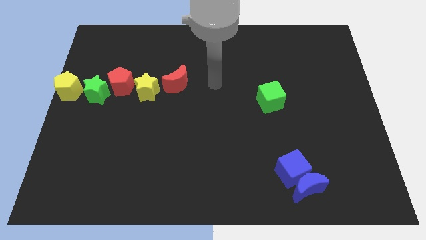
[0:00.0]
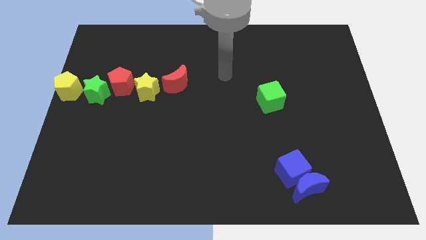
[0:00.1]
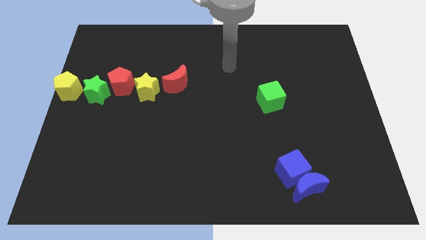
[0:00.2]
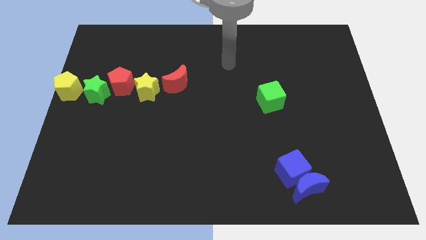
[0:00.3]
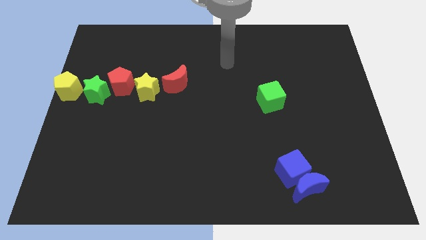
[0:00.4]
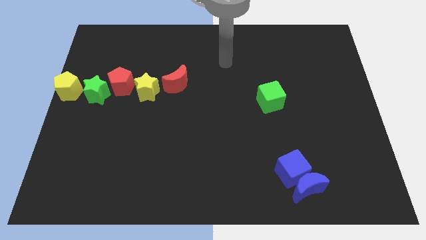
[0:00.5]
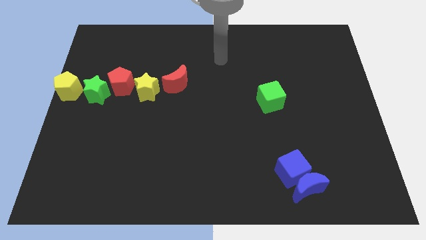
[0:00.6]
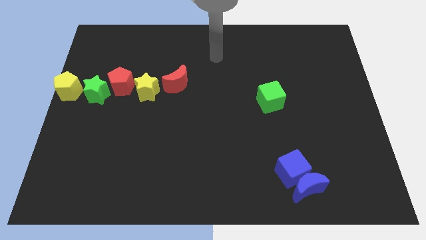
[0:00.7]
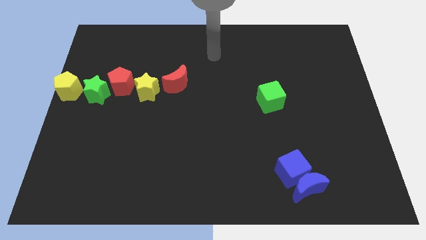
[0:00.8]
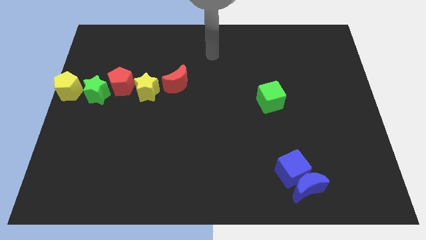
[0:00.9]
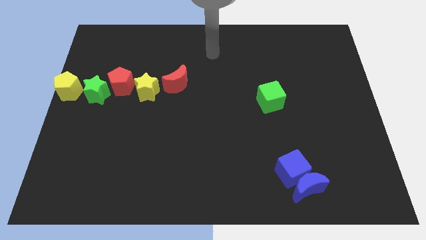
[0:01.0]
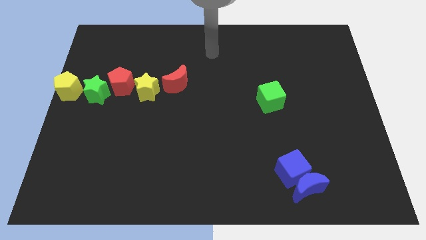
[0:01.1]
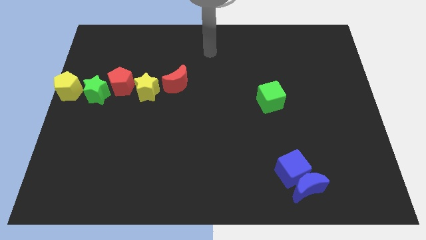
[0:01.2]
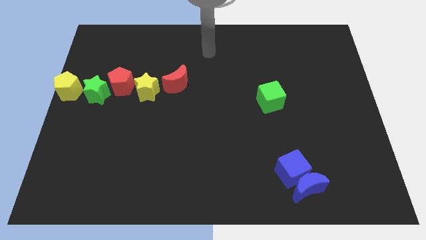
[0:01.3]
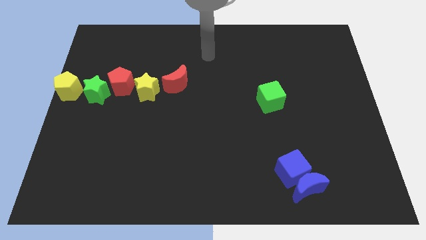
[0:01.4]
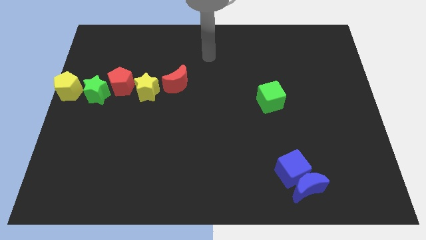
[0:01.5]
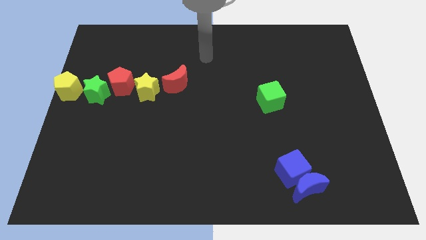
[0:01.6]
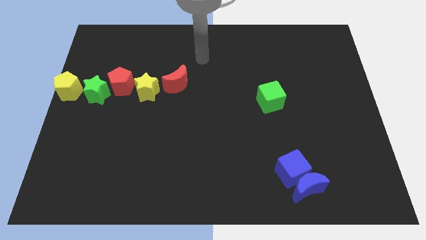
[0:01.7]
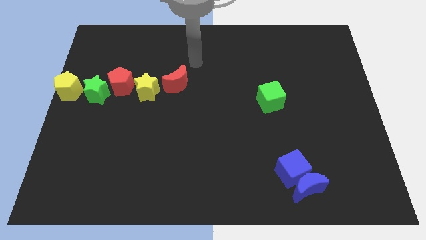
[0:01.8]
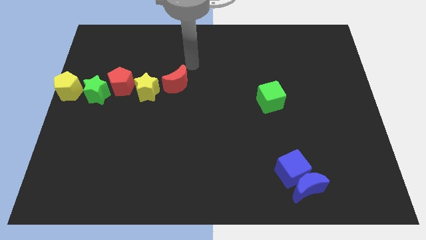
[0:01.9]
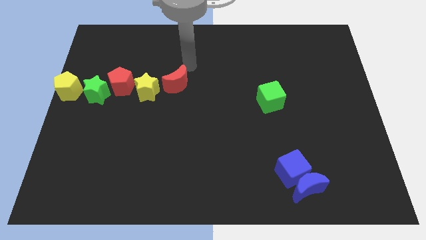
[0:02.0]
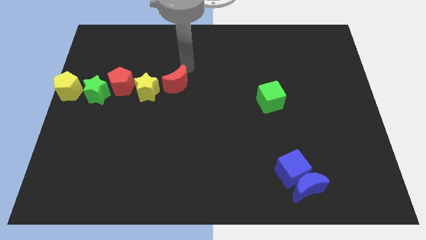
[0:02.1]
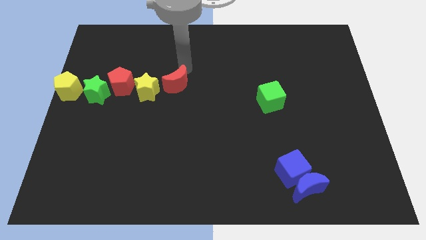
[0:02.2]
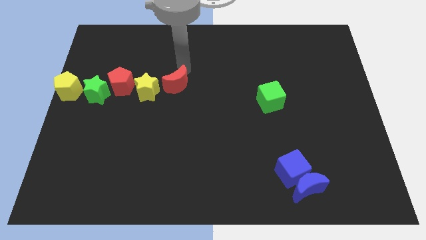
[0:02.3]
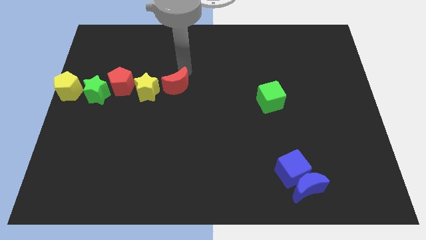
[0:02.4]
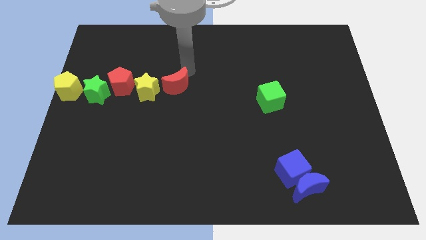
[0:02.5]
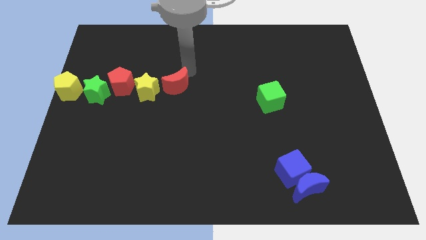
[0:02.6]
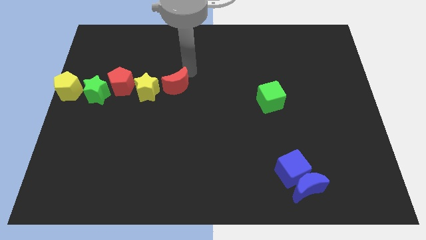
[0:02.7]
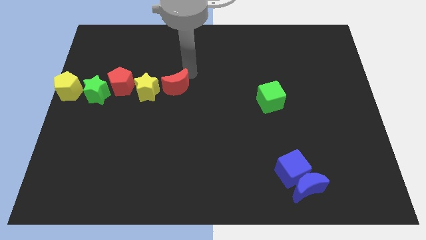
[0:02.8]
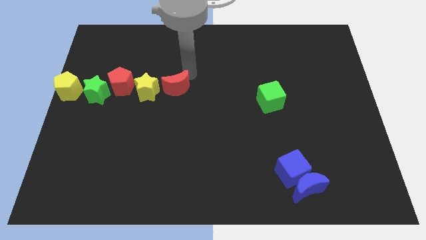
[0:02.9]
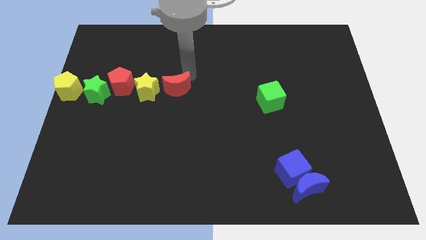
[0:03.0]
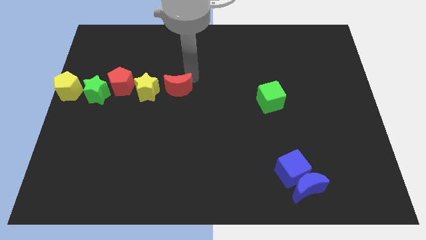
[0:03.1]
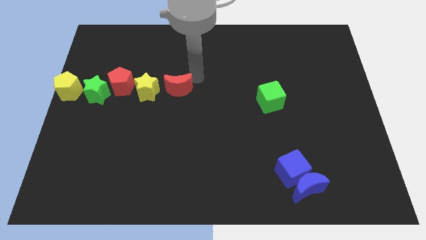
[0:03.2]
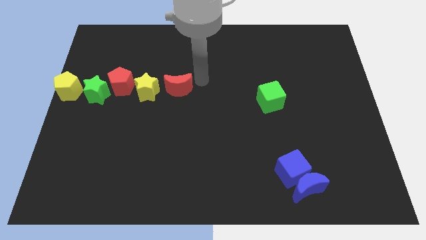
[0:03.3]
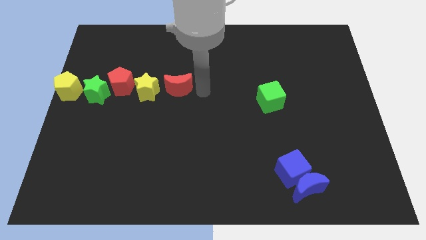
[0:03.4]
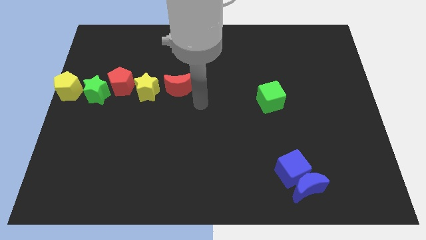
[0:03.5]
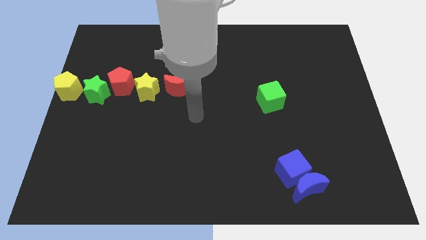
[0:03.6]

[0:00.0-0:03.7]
place the red moon right to the yellow star

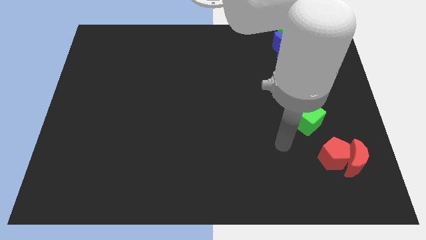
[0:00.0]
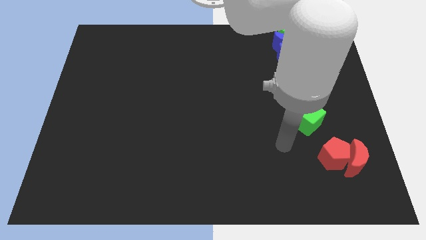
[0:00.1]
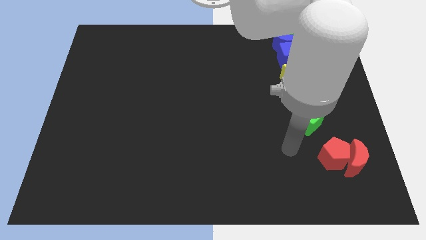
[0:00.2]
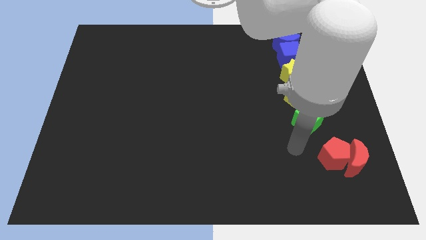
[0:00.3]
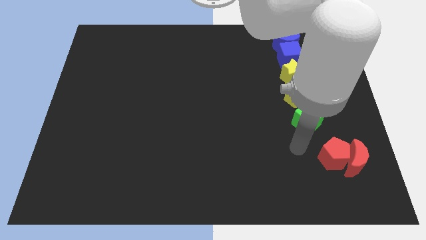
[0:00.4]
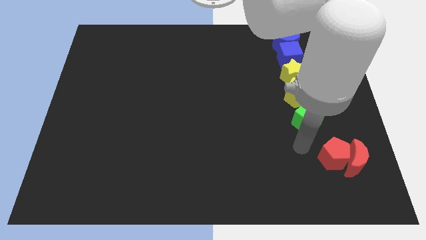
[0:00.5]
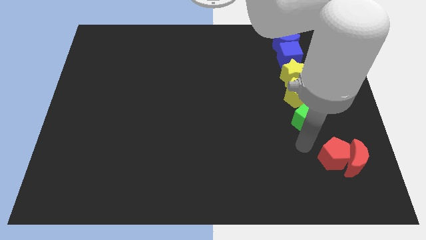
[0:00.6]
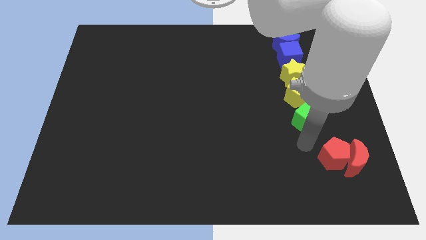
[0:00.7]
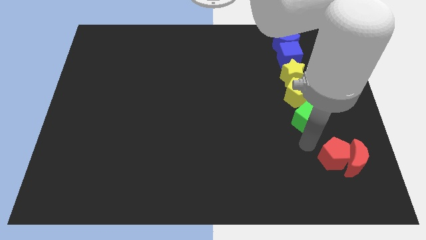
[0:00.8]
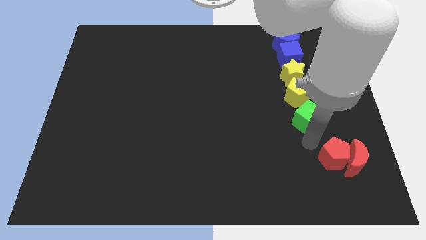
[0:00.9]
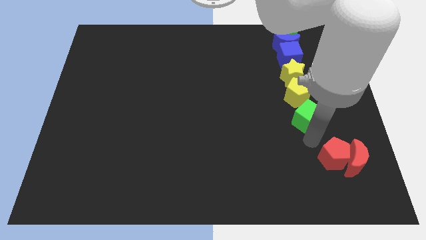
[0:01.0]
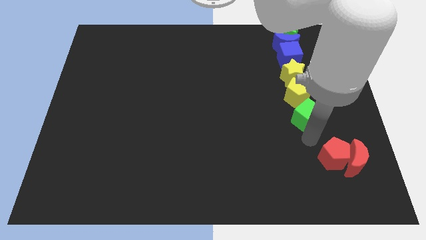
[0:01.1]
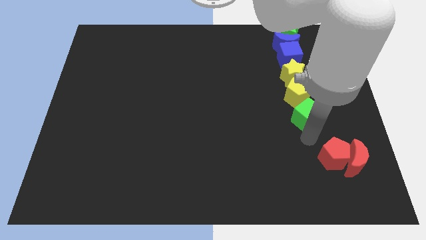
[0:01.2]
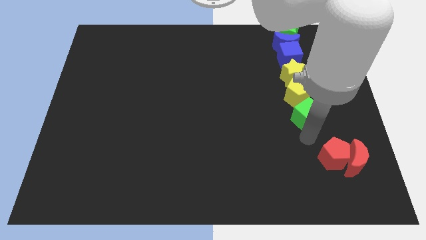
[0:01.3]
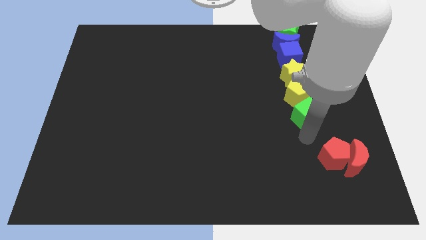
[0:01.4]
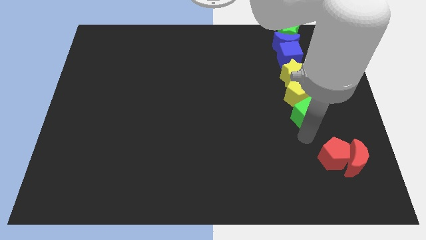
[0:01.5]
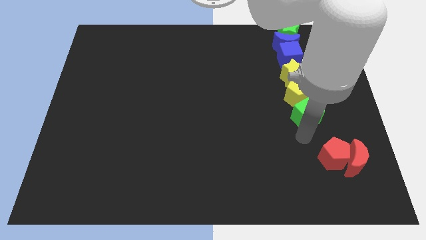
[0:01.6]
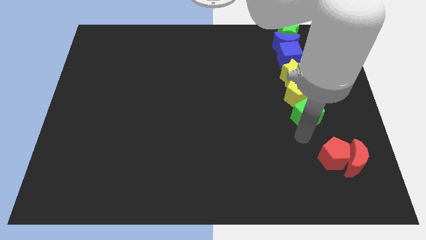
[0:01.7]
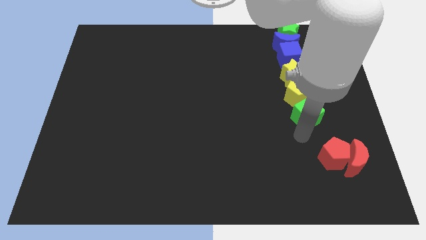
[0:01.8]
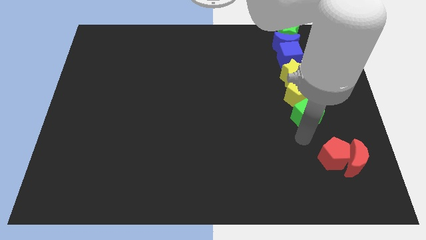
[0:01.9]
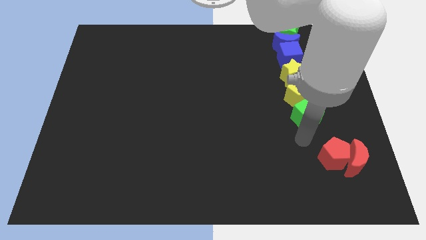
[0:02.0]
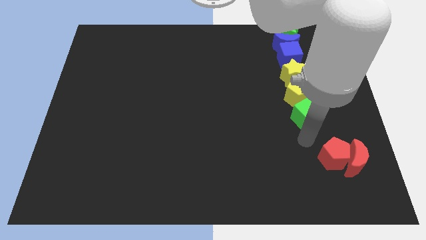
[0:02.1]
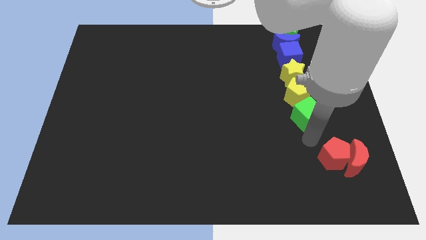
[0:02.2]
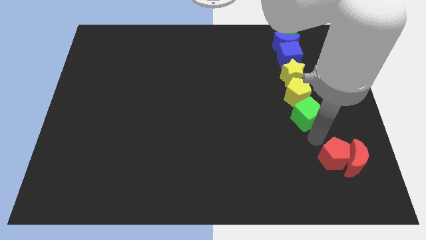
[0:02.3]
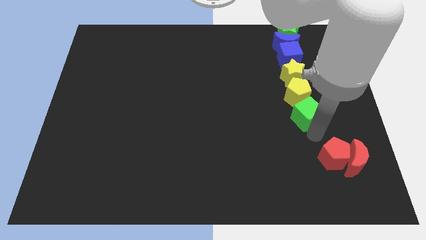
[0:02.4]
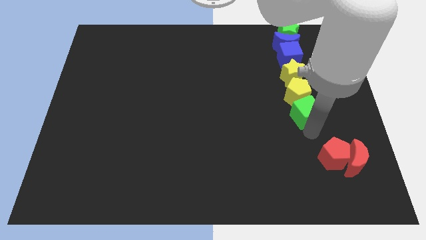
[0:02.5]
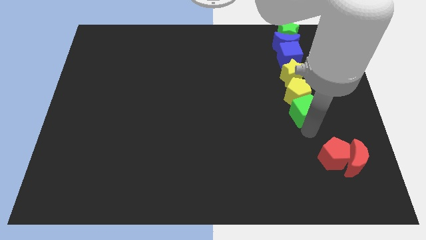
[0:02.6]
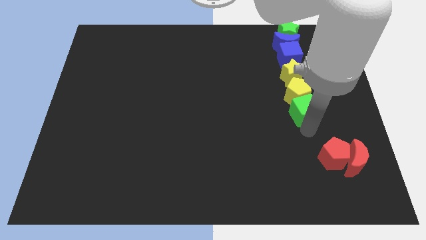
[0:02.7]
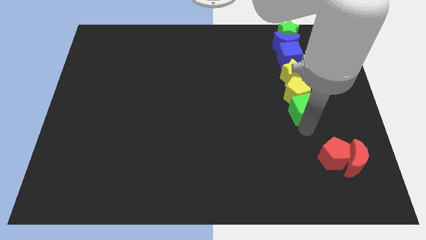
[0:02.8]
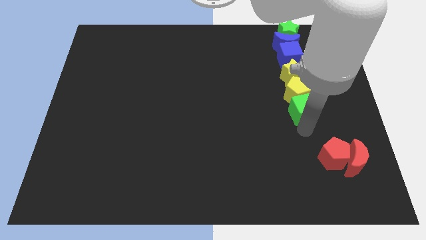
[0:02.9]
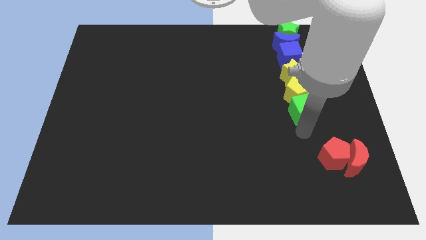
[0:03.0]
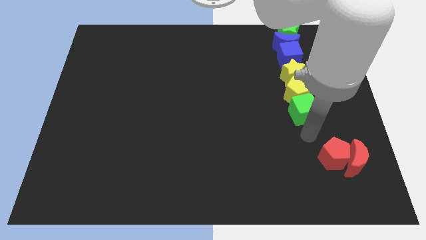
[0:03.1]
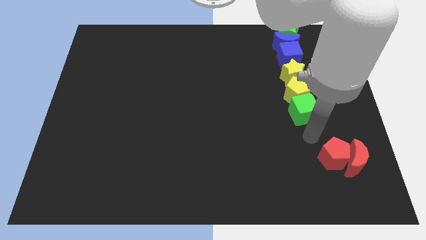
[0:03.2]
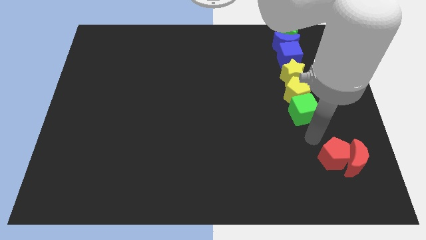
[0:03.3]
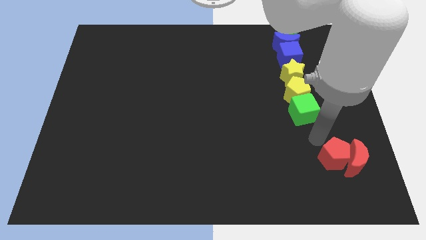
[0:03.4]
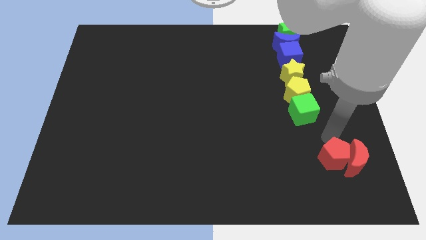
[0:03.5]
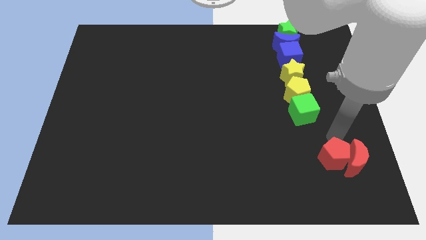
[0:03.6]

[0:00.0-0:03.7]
push the green cube slightly up

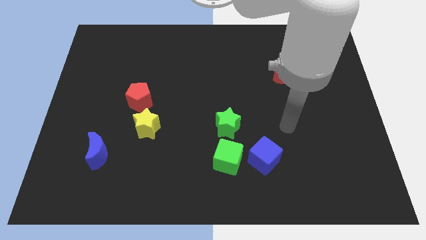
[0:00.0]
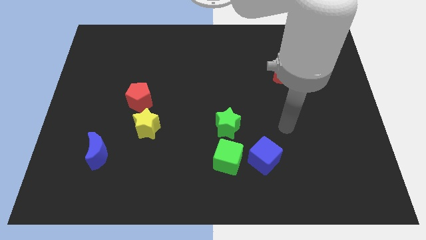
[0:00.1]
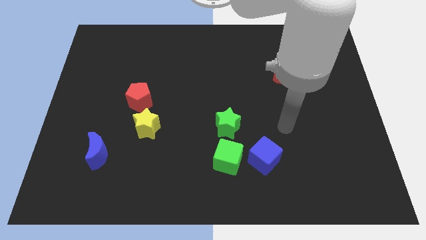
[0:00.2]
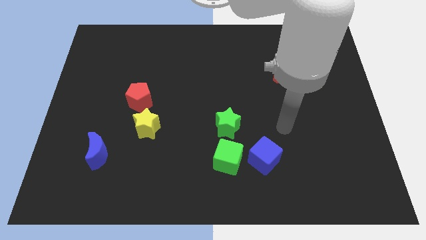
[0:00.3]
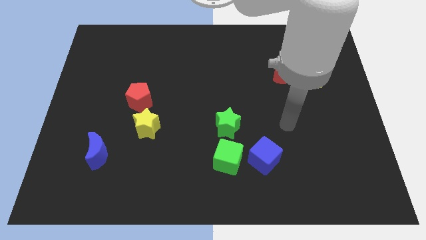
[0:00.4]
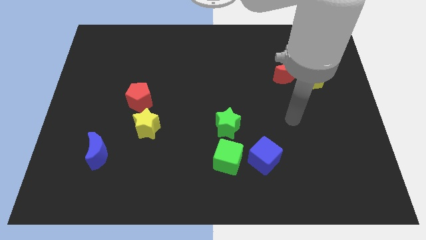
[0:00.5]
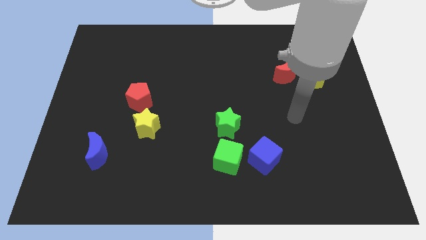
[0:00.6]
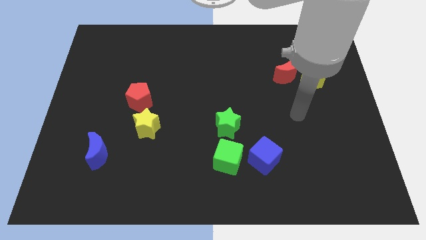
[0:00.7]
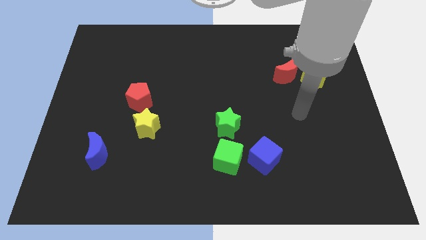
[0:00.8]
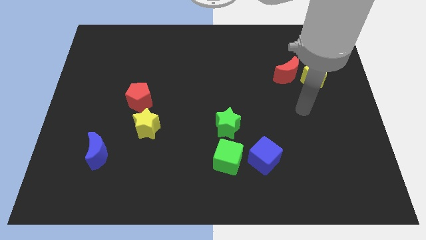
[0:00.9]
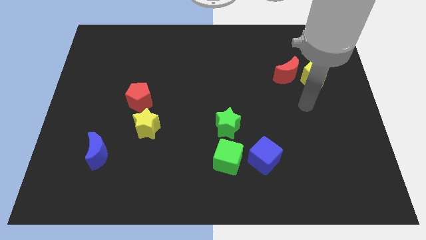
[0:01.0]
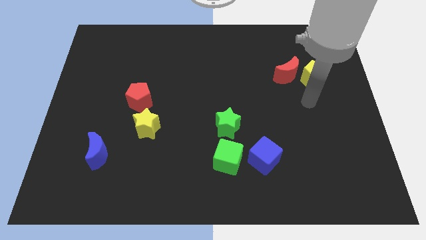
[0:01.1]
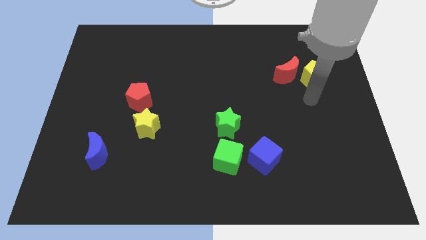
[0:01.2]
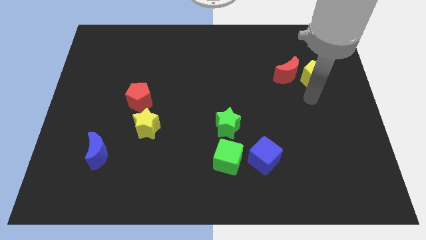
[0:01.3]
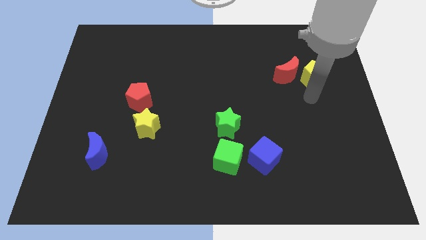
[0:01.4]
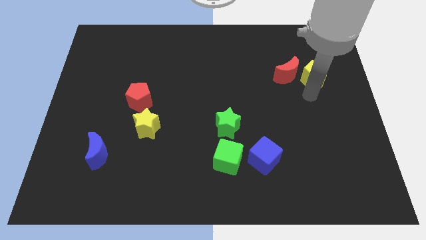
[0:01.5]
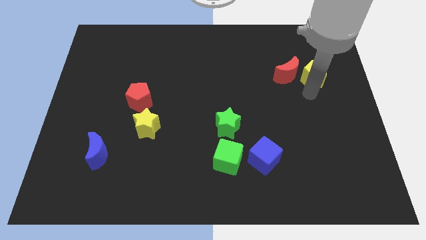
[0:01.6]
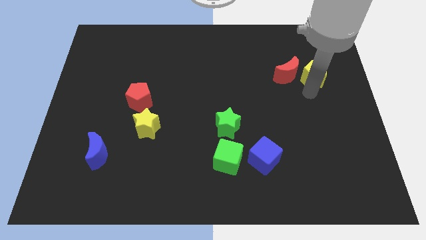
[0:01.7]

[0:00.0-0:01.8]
place arm on the bottom of yellow pentagon
